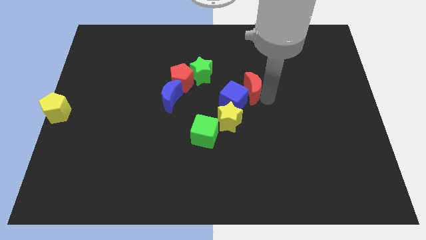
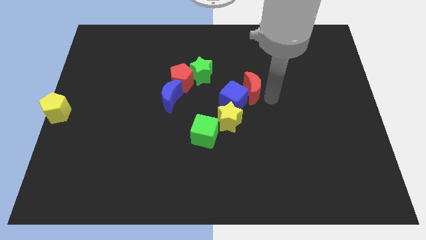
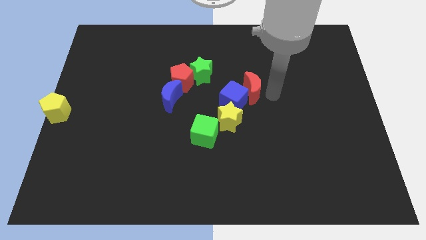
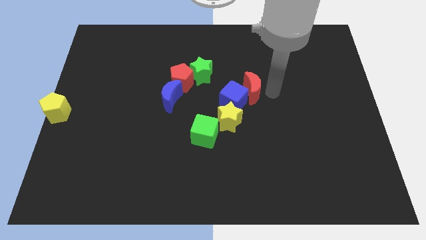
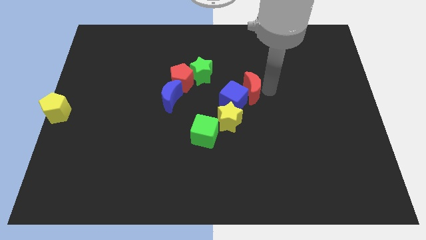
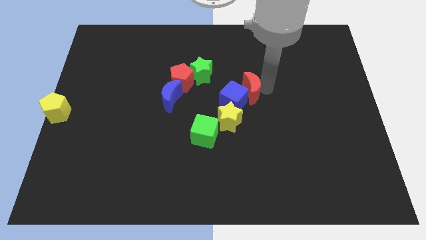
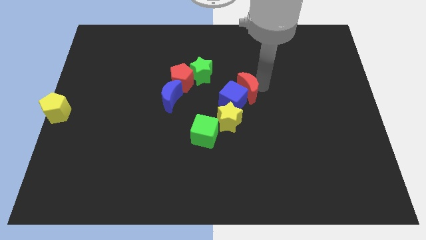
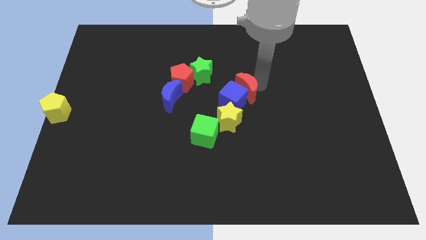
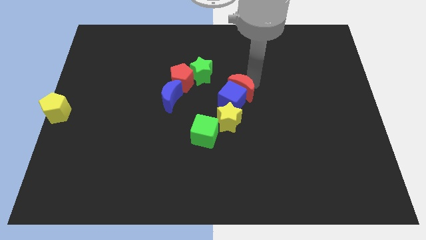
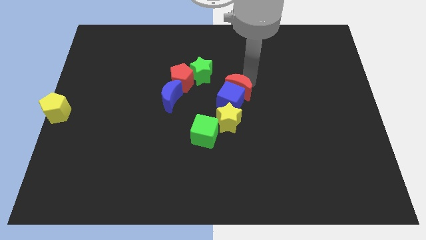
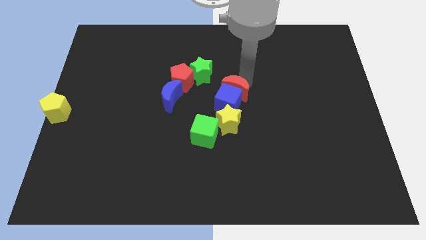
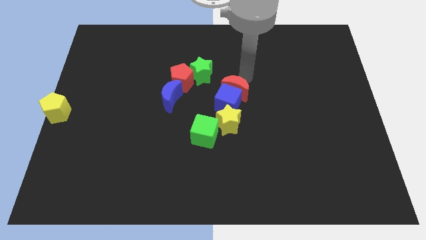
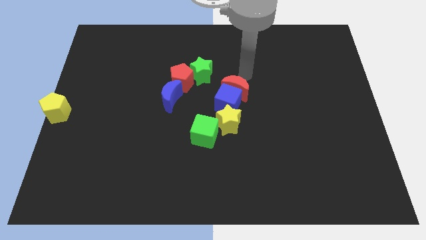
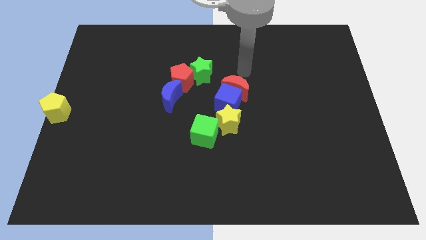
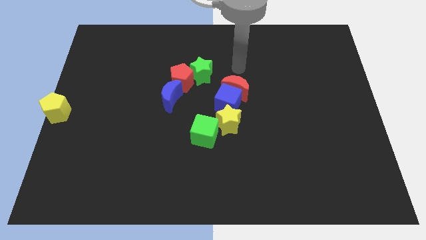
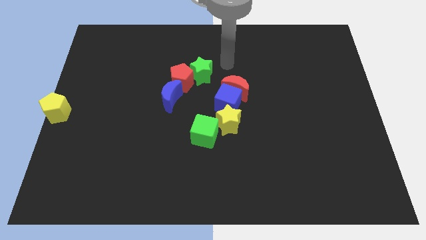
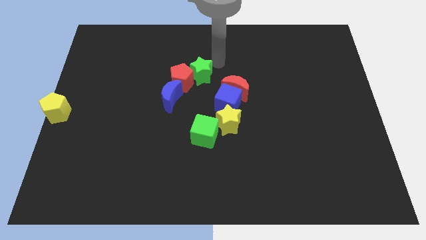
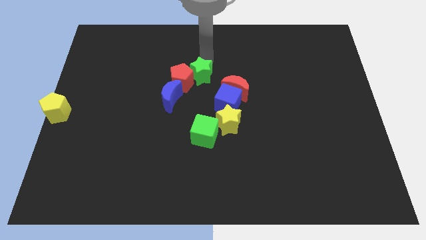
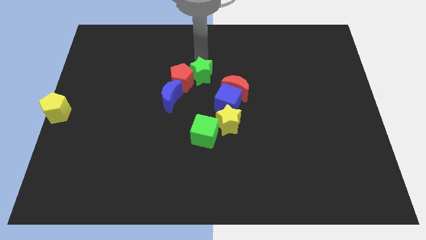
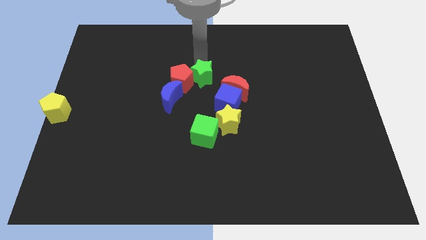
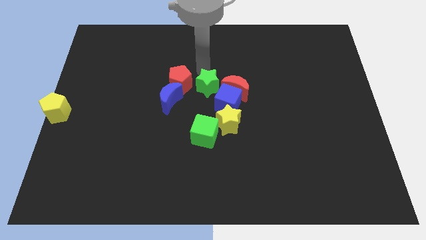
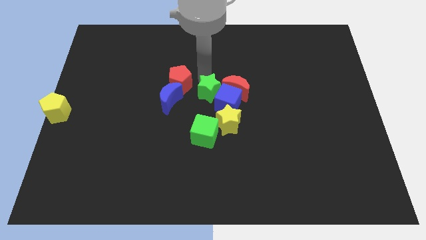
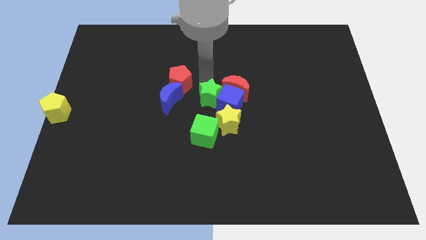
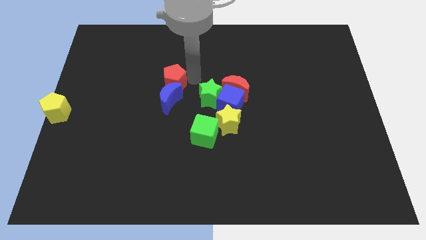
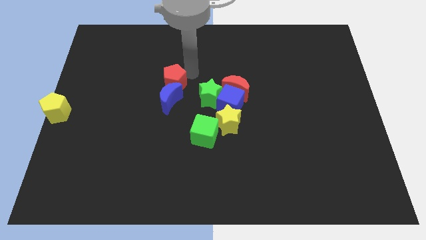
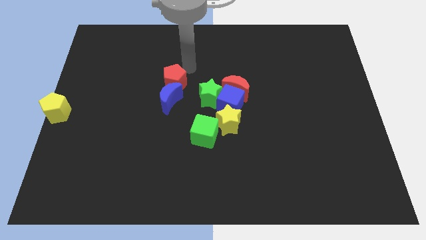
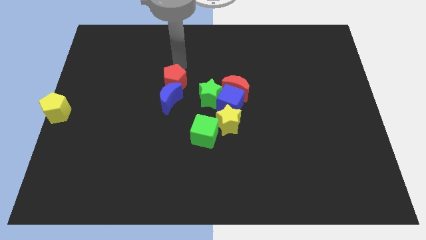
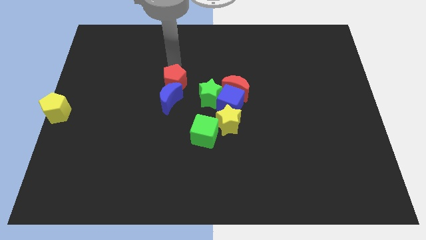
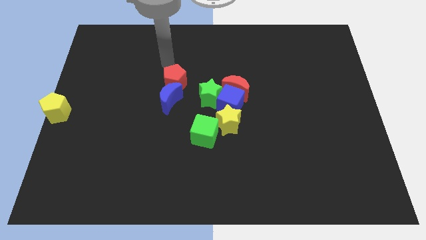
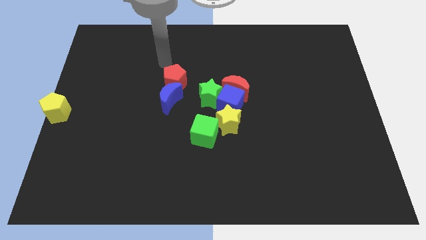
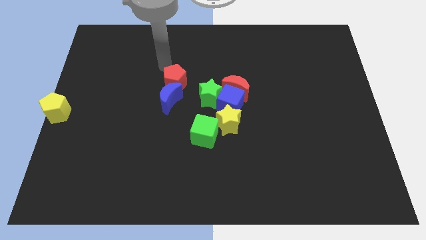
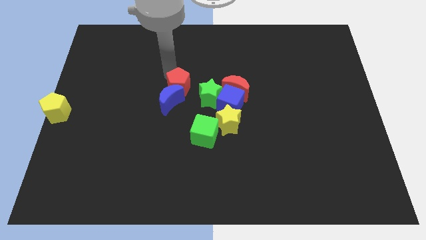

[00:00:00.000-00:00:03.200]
place the green star to left side of blue cube

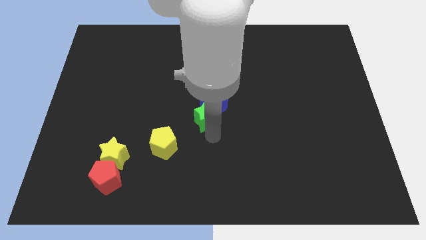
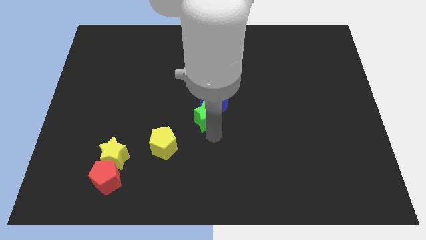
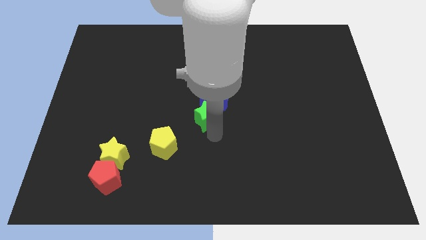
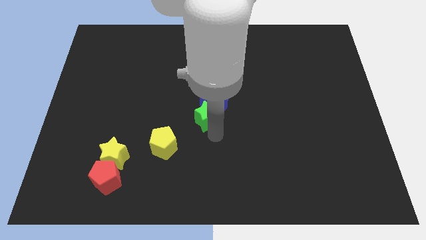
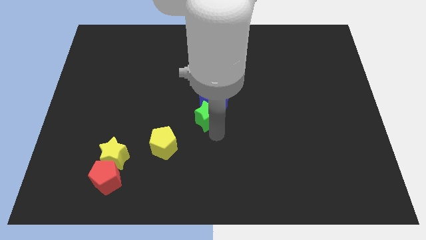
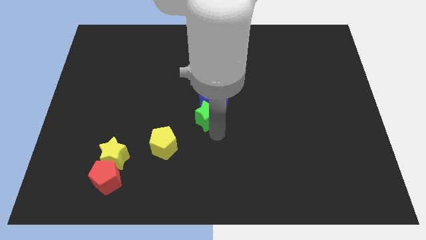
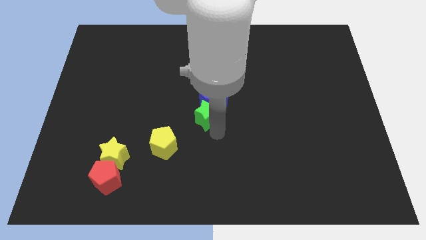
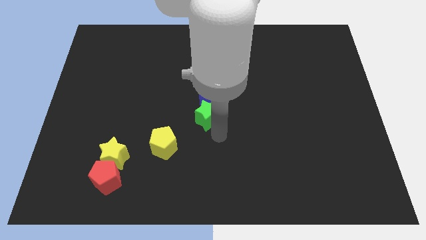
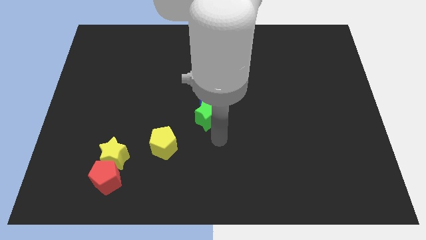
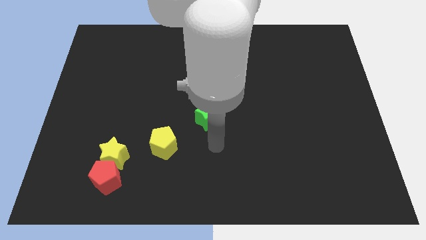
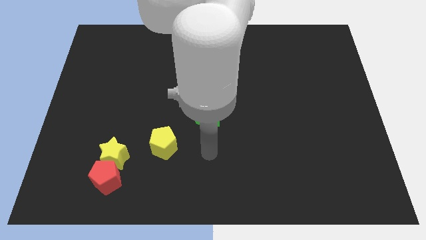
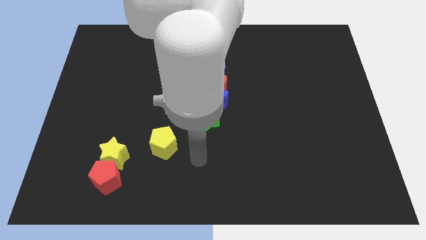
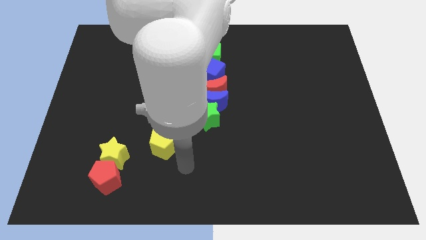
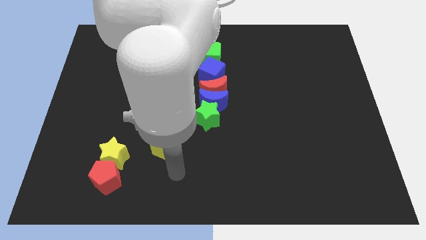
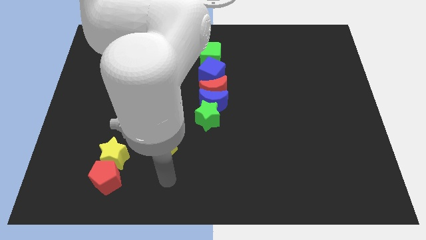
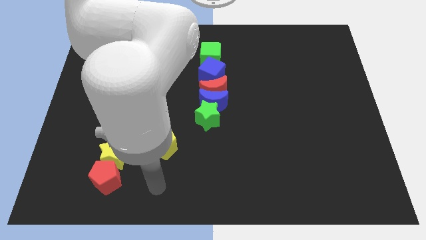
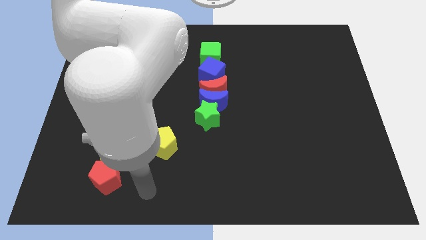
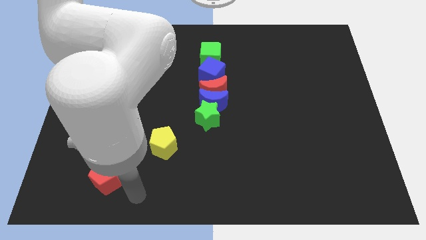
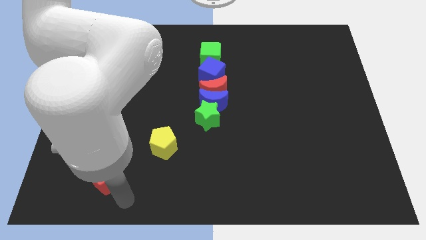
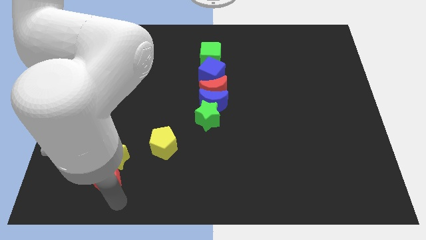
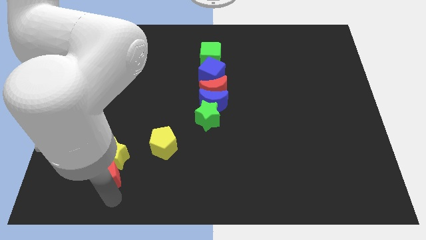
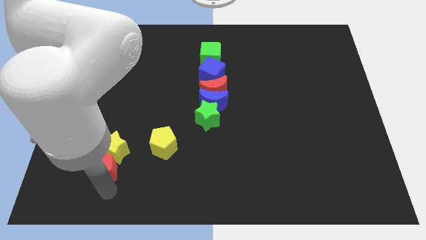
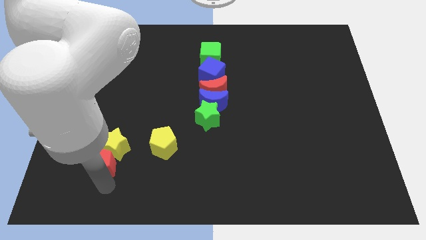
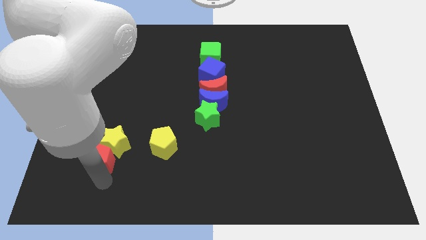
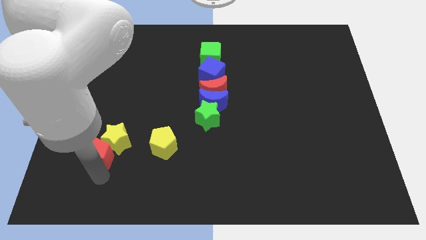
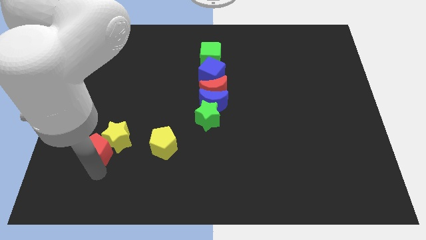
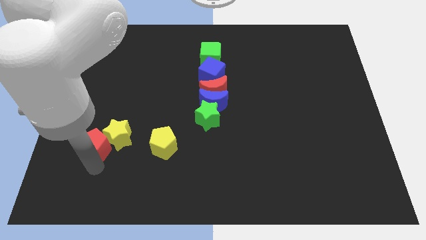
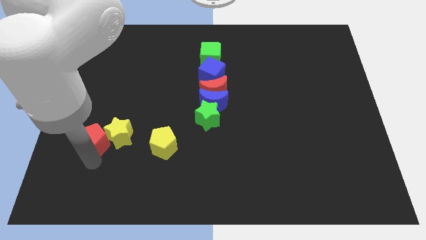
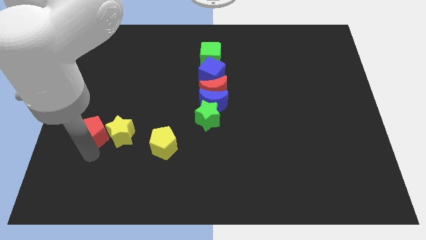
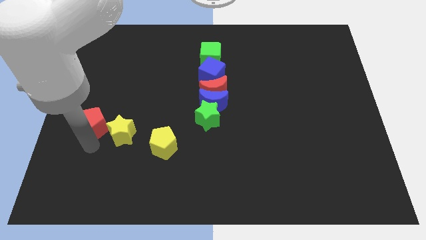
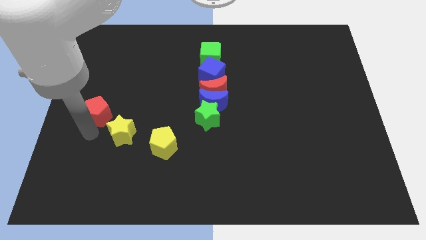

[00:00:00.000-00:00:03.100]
move the red pentagon to the left of the yellow star

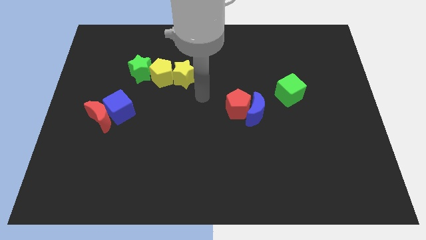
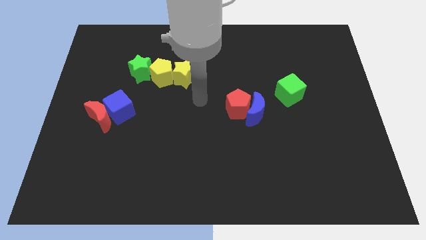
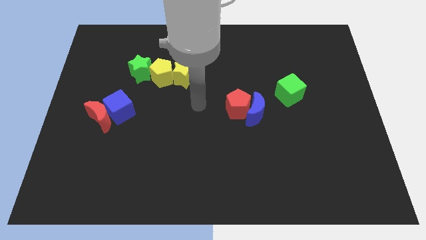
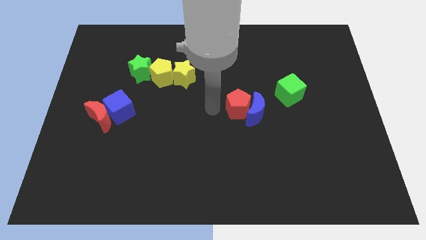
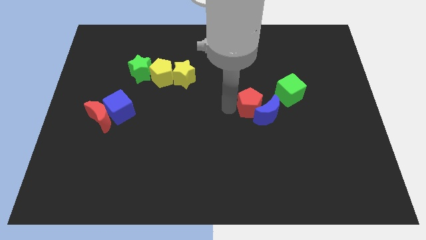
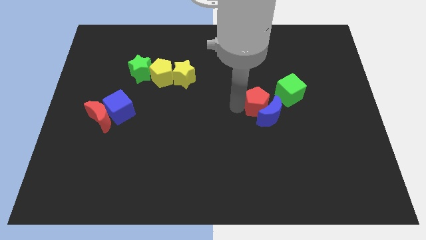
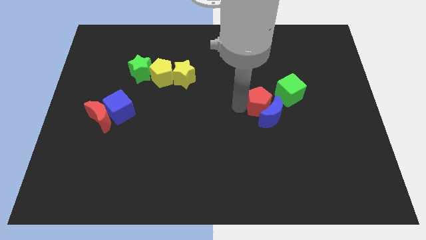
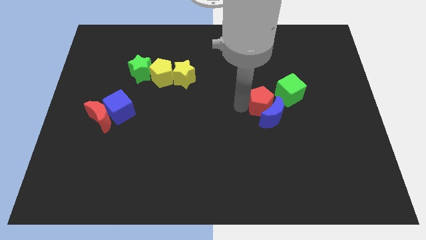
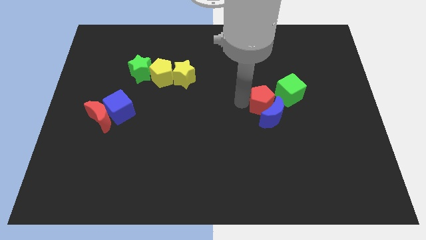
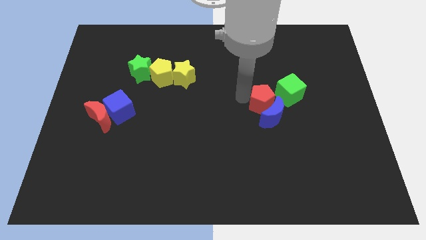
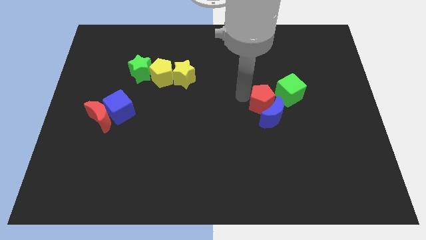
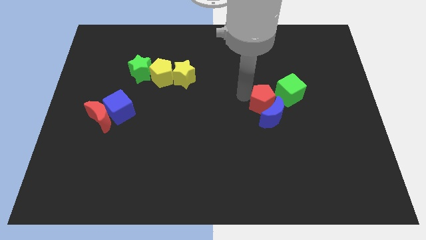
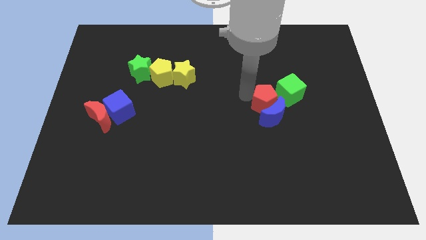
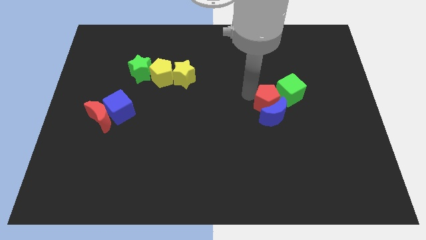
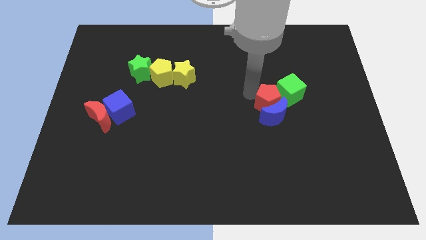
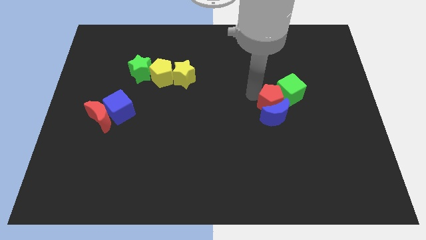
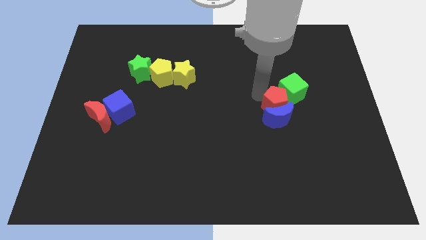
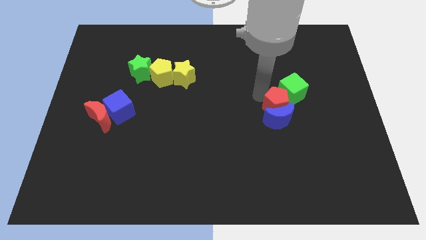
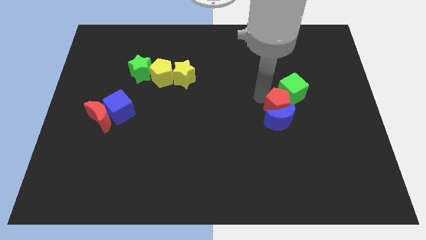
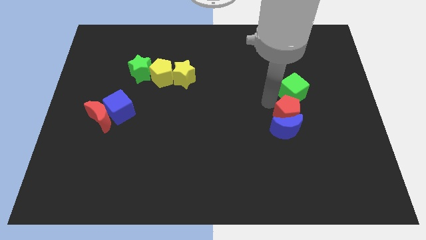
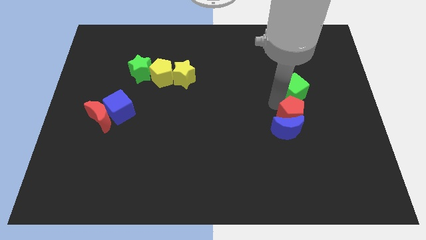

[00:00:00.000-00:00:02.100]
push the red pentagon into the blue crescent below the green cube

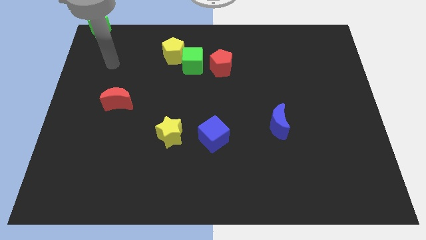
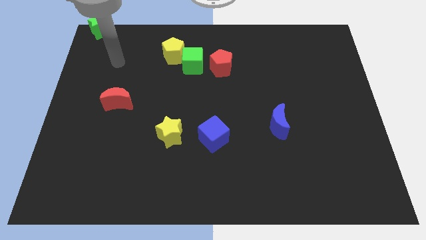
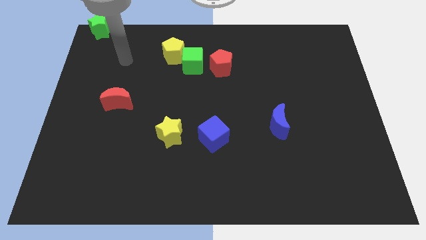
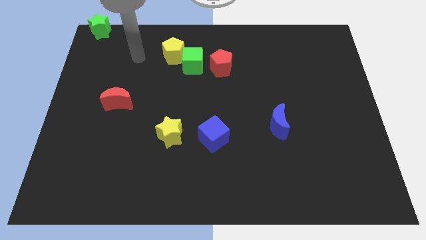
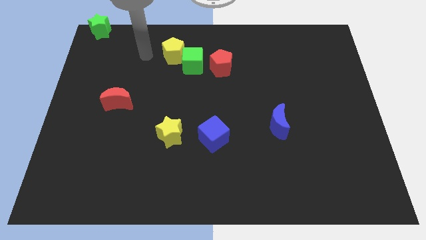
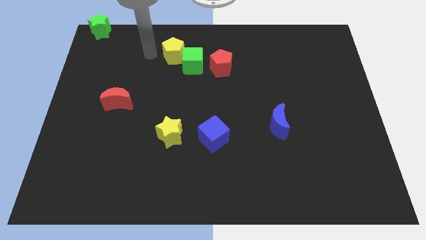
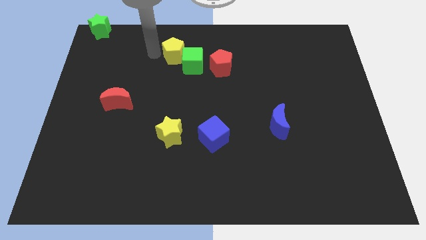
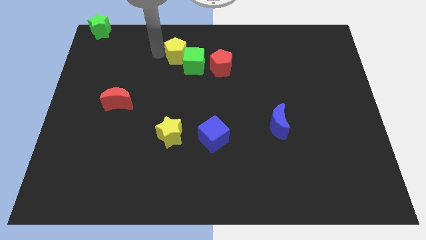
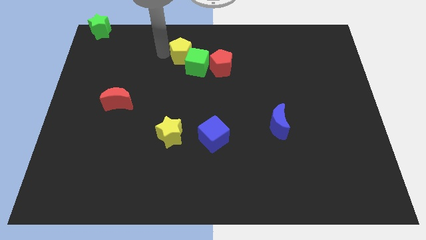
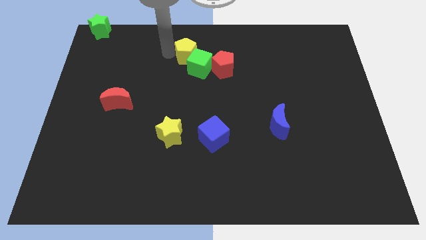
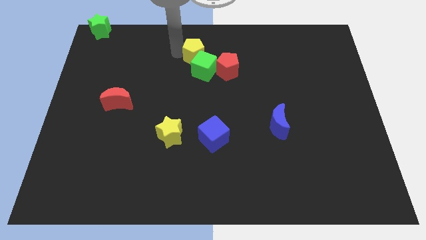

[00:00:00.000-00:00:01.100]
push yellow pentagon in to green cube
